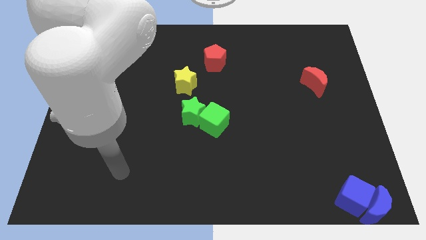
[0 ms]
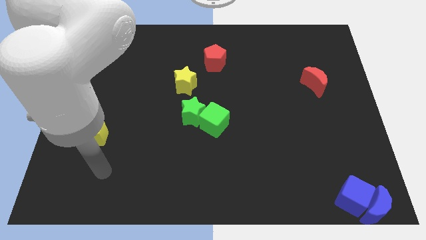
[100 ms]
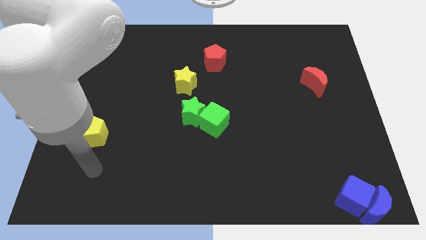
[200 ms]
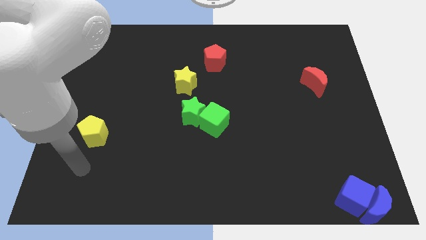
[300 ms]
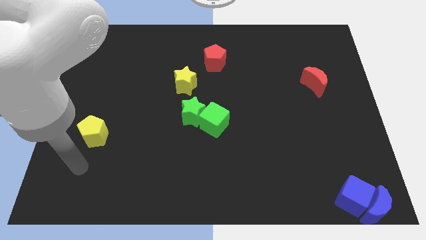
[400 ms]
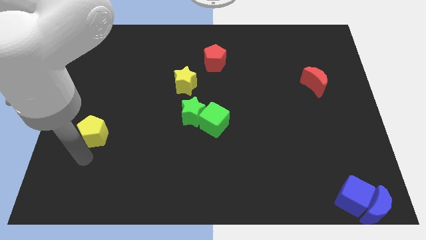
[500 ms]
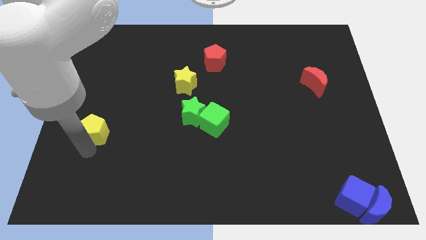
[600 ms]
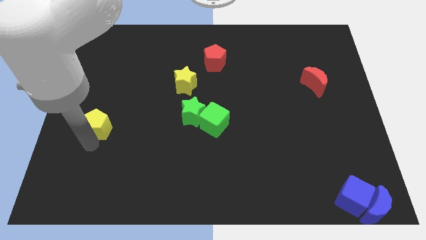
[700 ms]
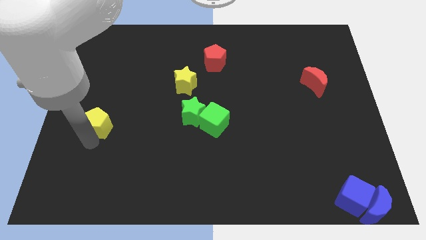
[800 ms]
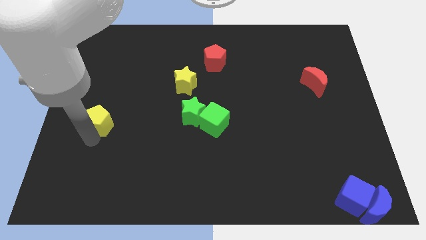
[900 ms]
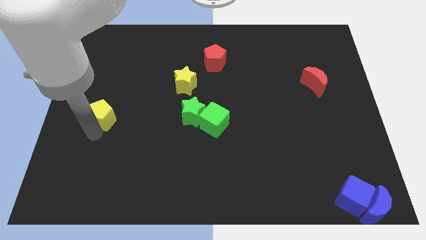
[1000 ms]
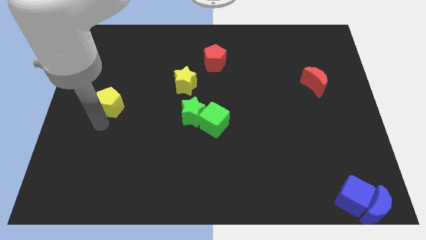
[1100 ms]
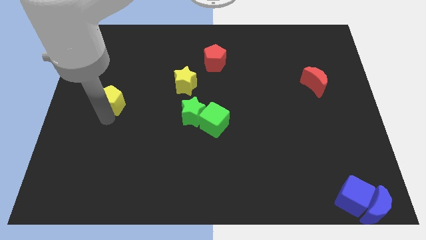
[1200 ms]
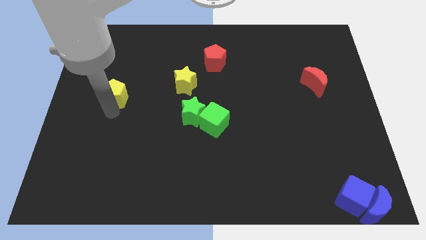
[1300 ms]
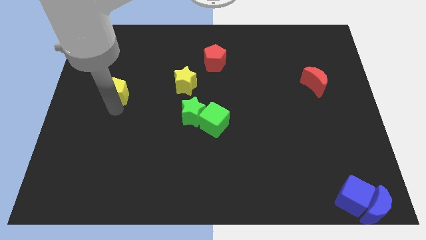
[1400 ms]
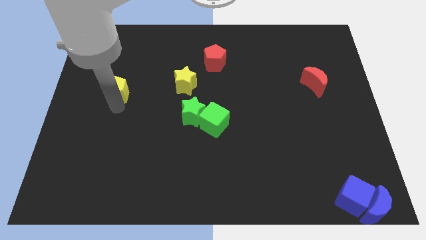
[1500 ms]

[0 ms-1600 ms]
push the yellow pentagon slightly to the top of the board

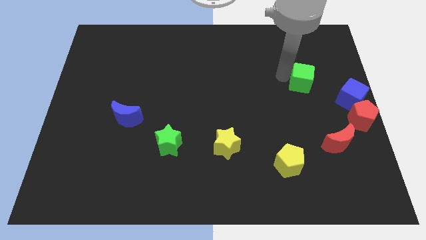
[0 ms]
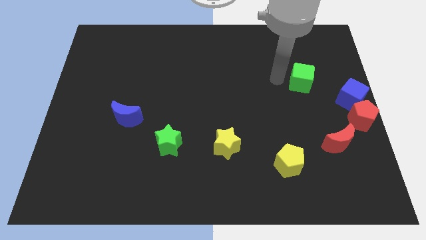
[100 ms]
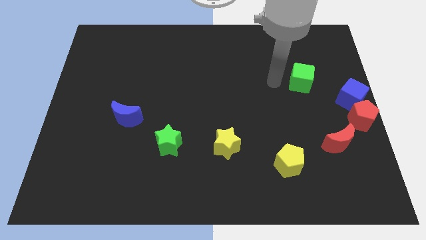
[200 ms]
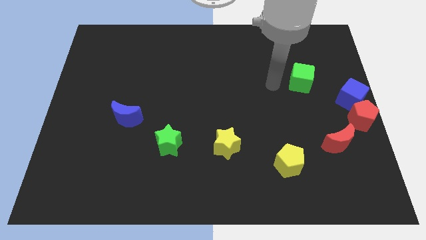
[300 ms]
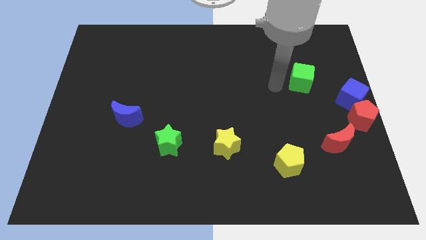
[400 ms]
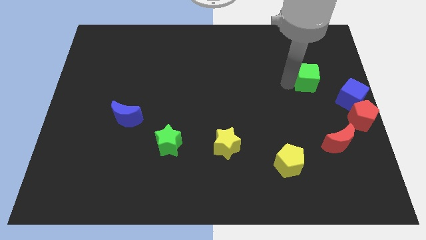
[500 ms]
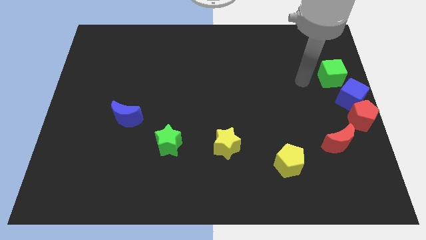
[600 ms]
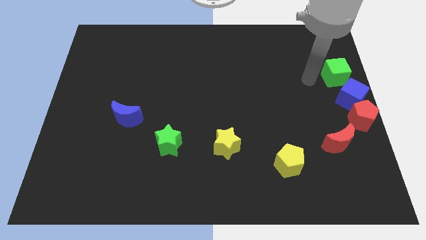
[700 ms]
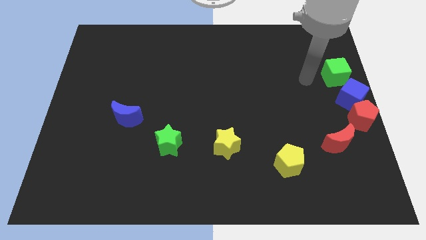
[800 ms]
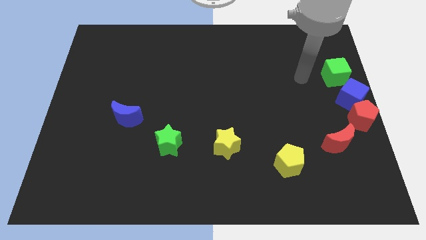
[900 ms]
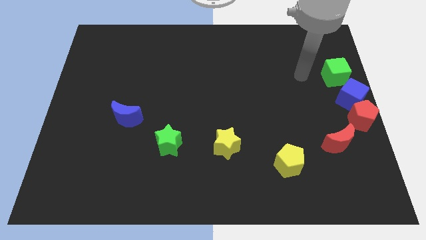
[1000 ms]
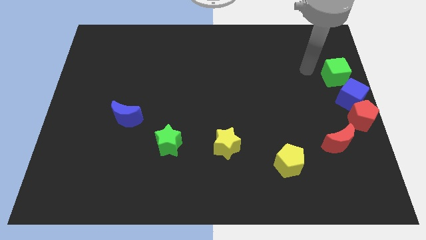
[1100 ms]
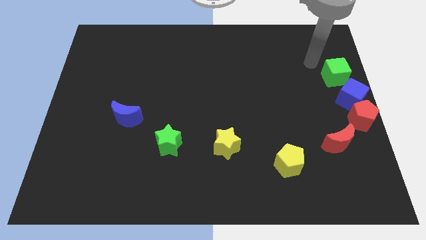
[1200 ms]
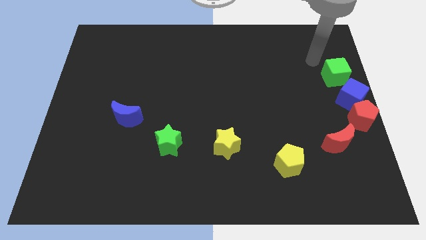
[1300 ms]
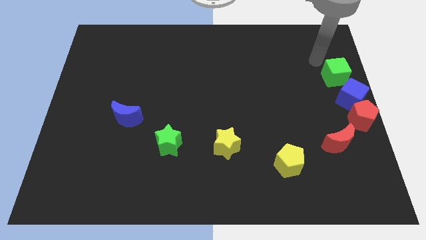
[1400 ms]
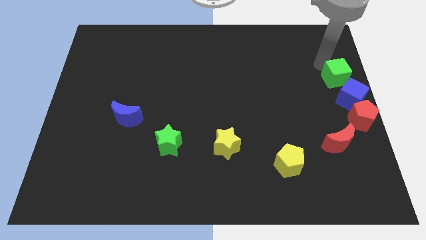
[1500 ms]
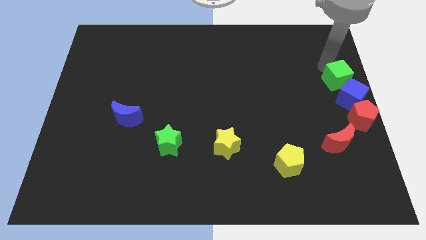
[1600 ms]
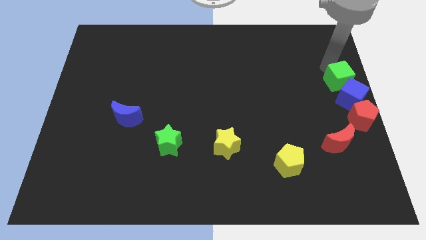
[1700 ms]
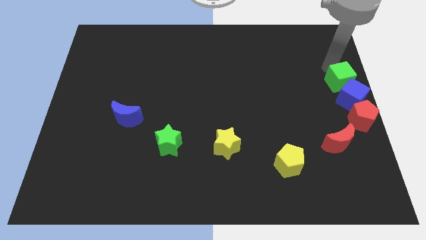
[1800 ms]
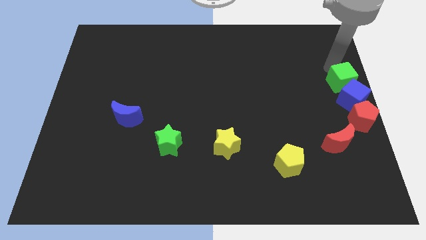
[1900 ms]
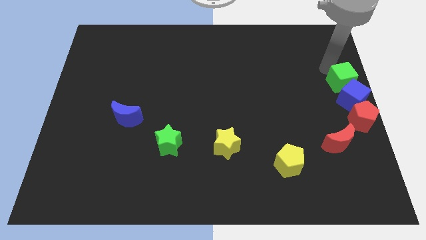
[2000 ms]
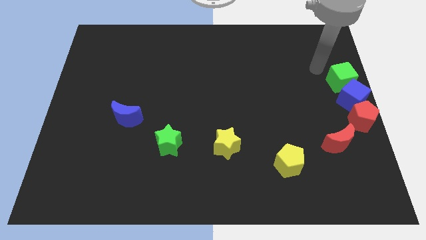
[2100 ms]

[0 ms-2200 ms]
move green cube above blue cube

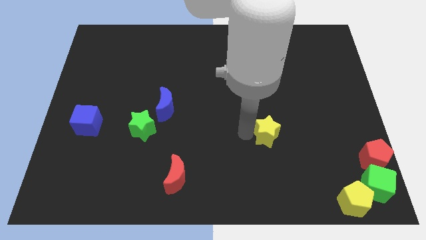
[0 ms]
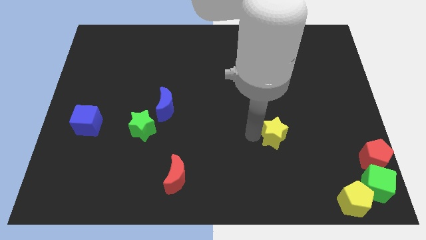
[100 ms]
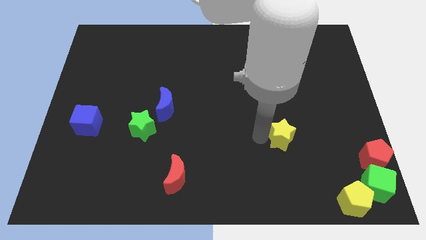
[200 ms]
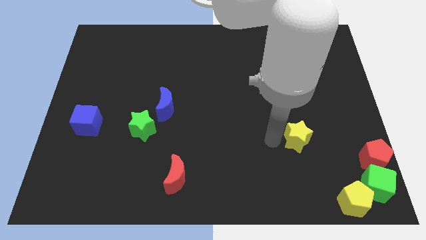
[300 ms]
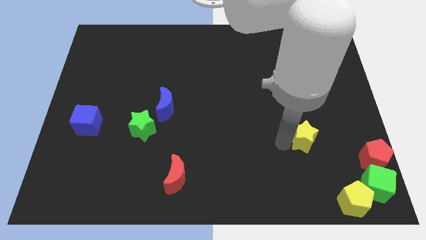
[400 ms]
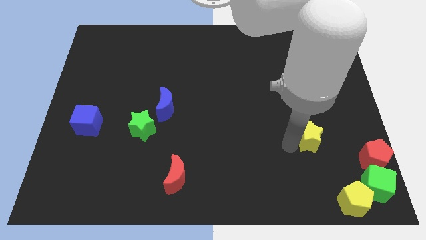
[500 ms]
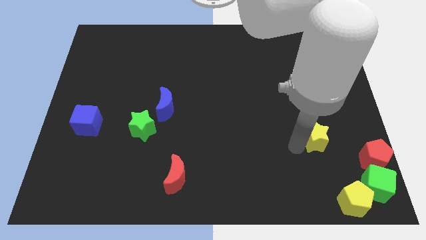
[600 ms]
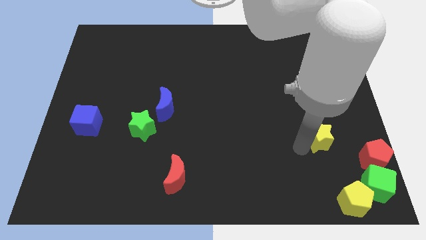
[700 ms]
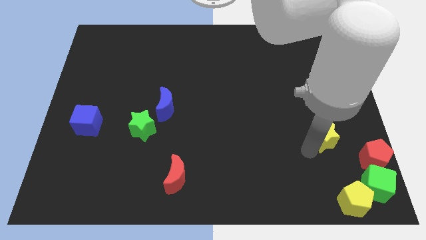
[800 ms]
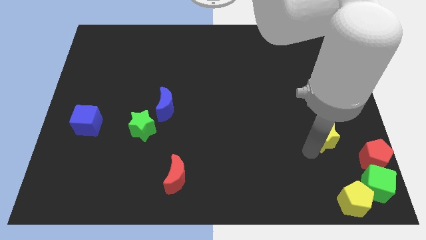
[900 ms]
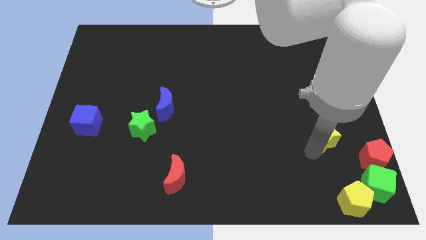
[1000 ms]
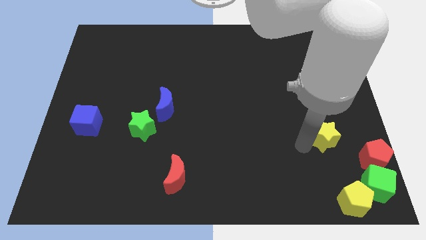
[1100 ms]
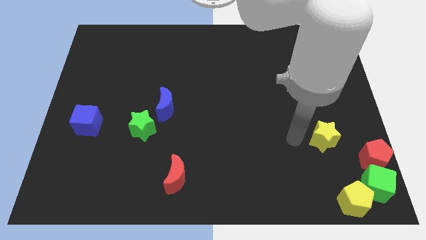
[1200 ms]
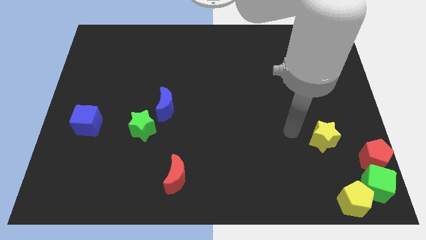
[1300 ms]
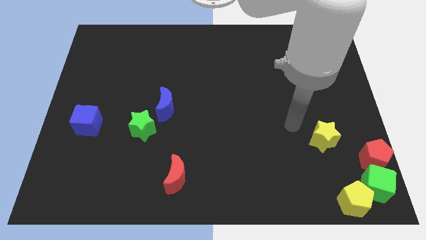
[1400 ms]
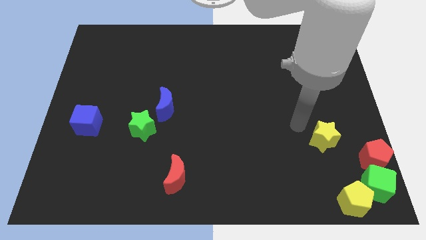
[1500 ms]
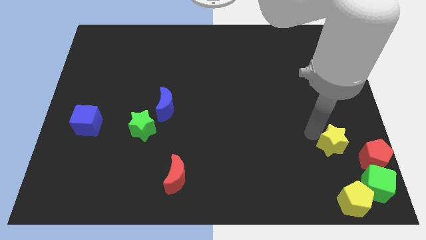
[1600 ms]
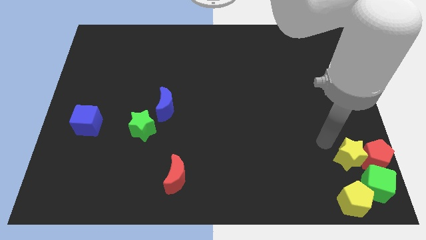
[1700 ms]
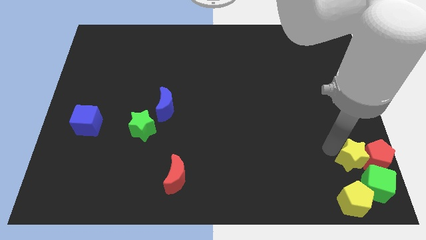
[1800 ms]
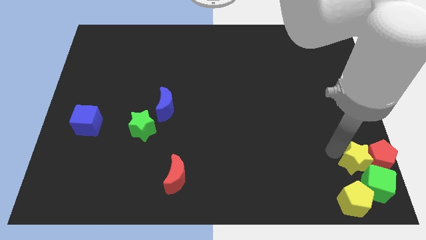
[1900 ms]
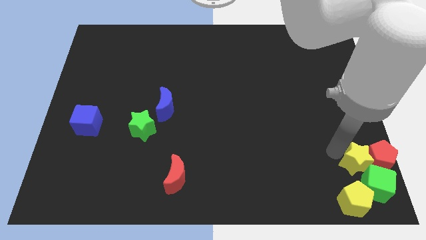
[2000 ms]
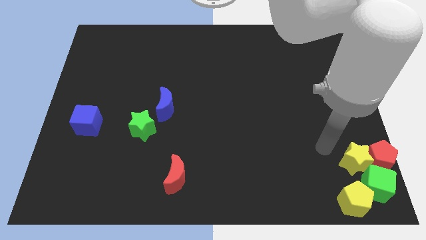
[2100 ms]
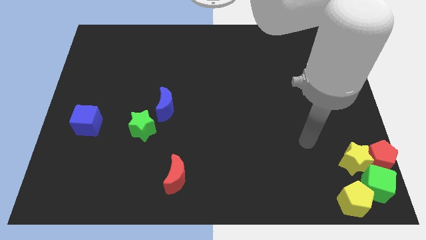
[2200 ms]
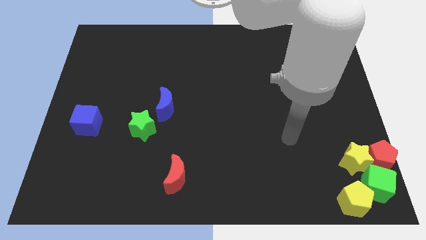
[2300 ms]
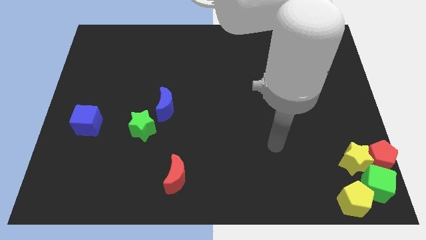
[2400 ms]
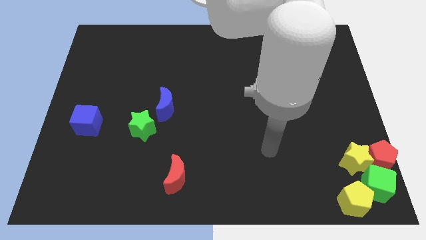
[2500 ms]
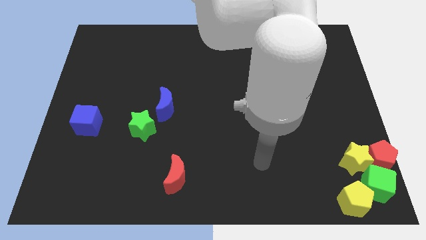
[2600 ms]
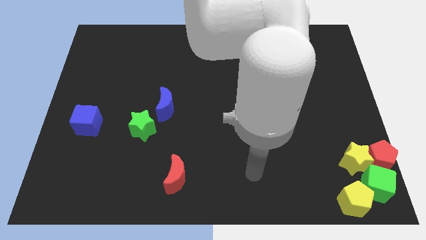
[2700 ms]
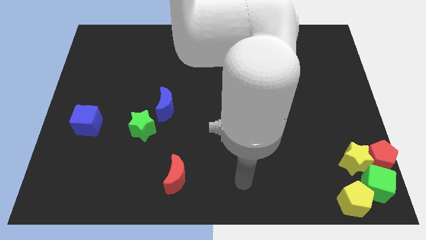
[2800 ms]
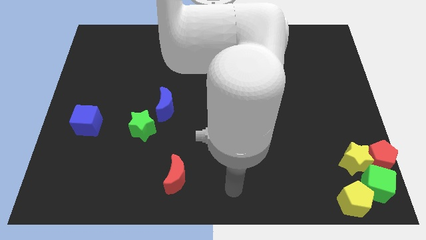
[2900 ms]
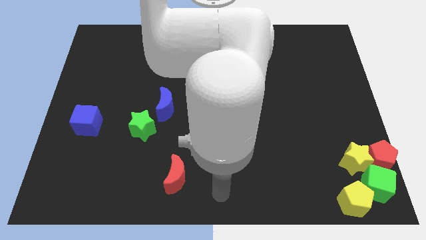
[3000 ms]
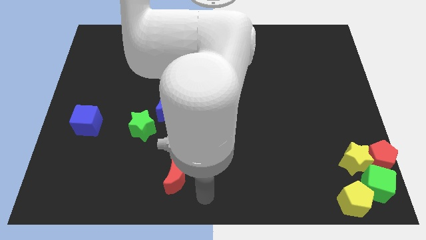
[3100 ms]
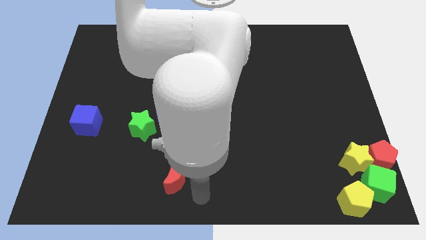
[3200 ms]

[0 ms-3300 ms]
push the yellow star into the group of blocks

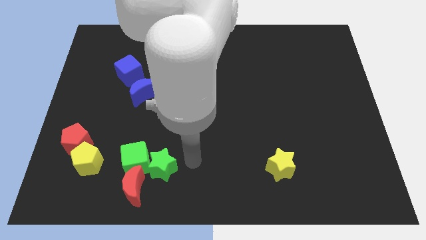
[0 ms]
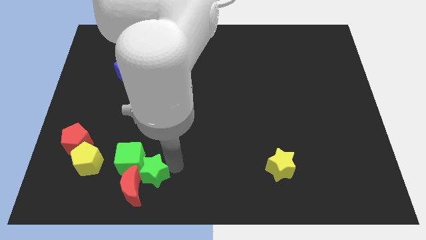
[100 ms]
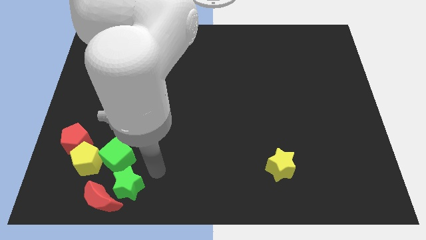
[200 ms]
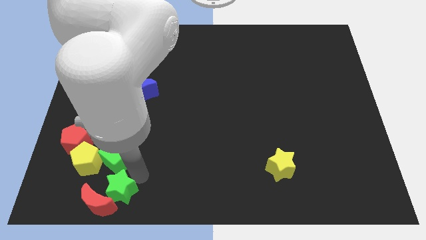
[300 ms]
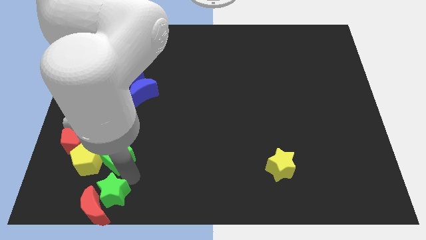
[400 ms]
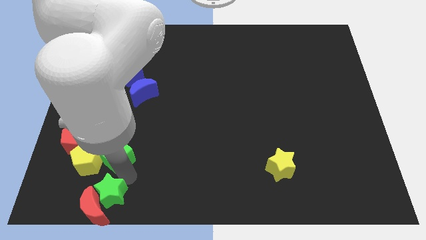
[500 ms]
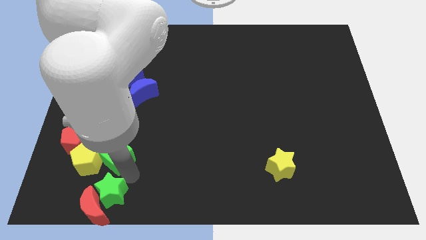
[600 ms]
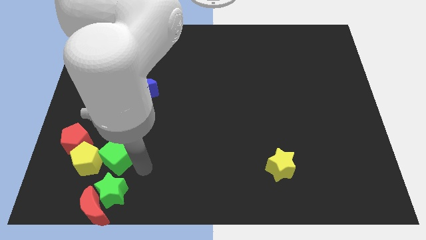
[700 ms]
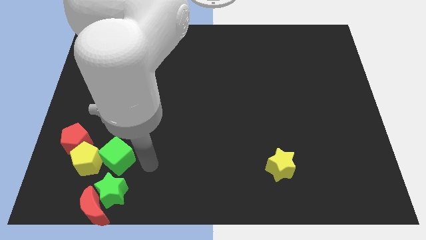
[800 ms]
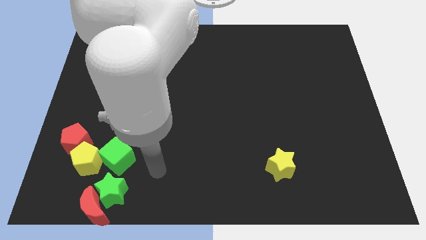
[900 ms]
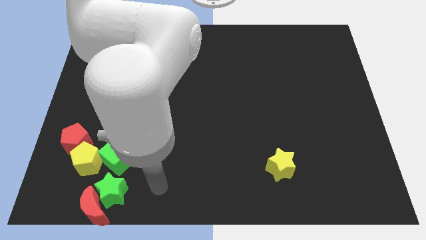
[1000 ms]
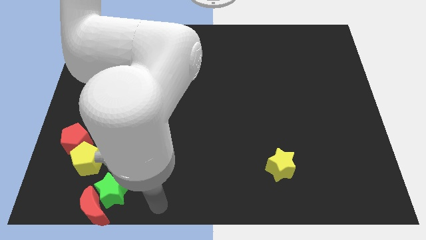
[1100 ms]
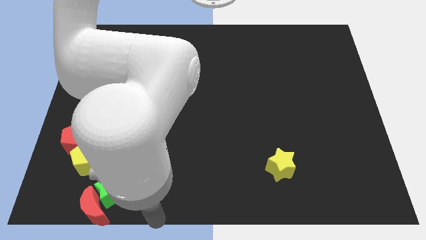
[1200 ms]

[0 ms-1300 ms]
push green star in red moon

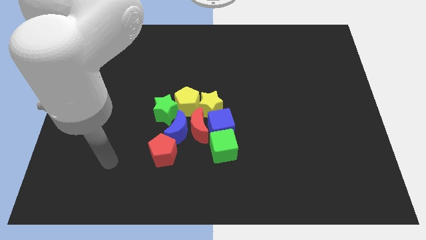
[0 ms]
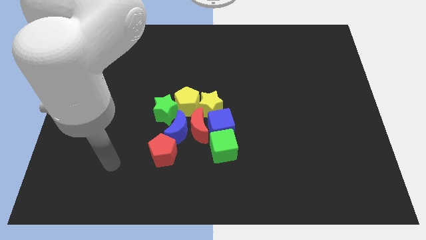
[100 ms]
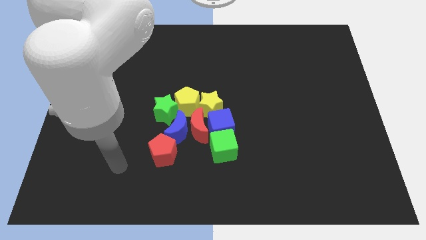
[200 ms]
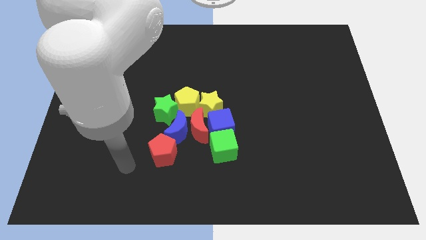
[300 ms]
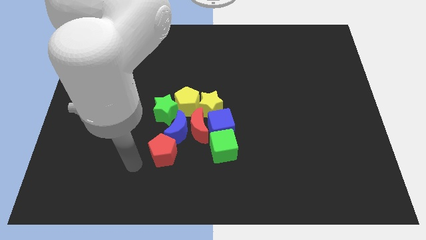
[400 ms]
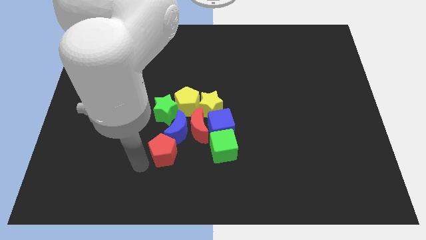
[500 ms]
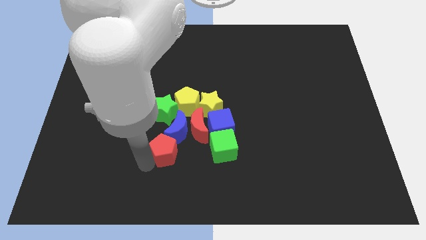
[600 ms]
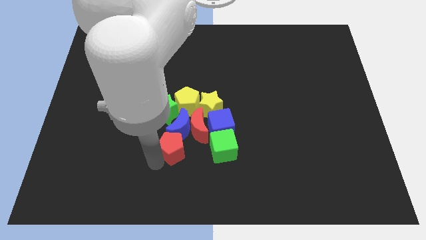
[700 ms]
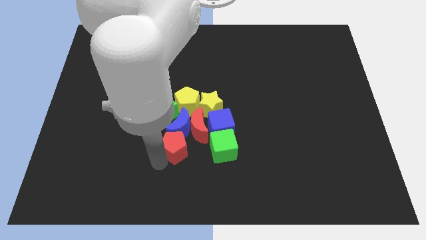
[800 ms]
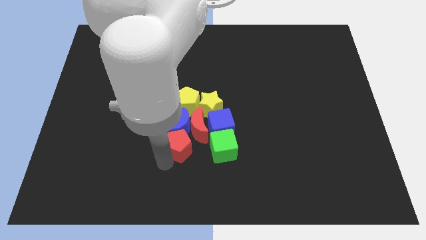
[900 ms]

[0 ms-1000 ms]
adjust the red pentagon below the blue crescent
